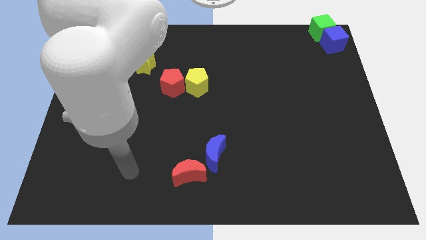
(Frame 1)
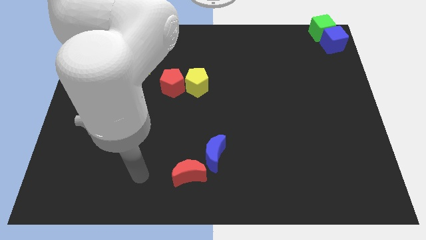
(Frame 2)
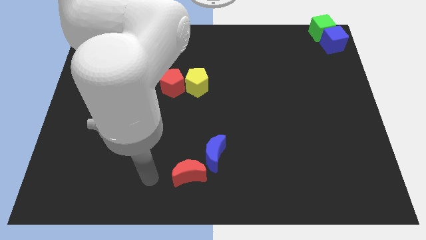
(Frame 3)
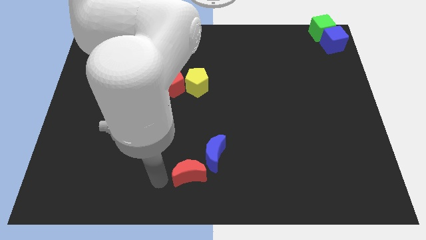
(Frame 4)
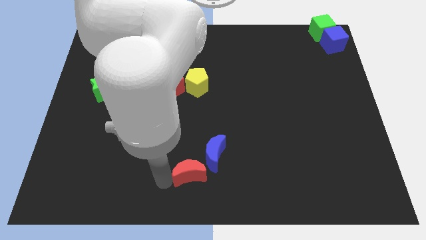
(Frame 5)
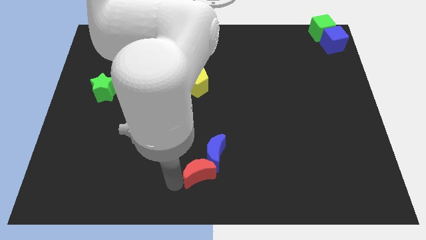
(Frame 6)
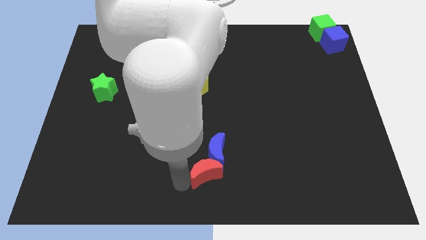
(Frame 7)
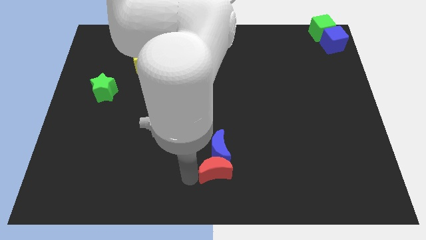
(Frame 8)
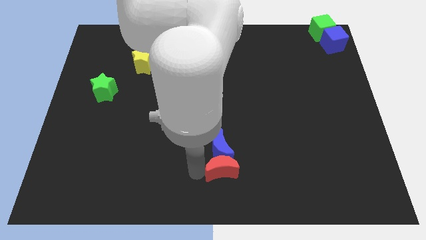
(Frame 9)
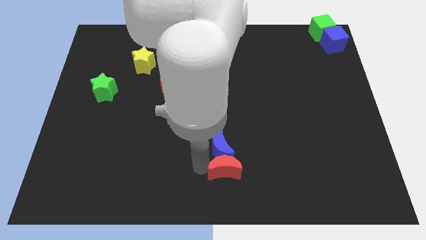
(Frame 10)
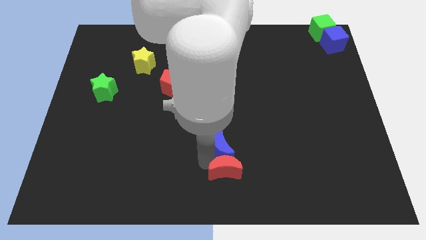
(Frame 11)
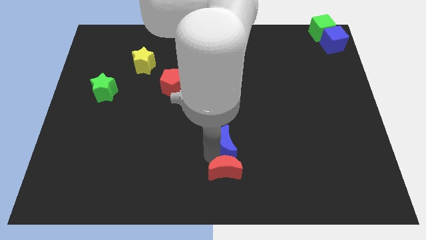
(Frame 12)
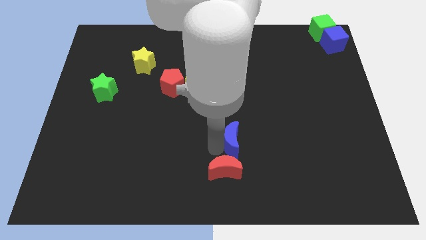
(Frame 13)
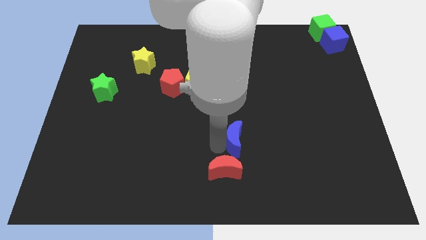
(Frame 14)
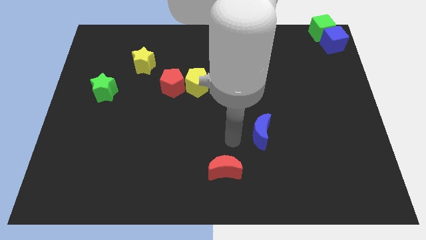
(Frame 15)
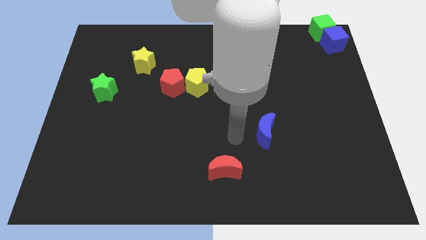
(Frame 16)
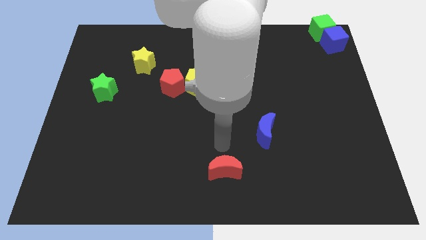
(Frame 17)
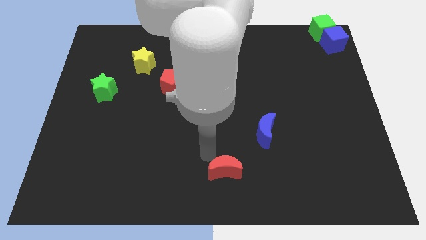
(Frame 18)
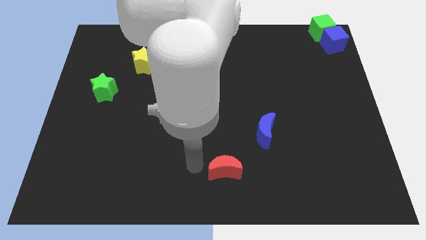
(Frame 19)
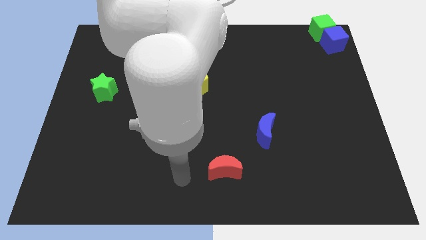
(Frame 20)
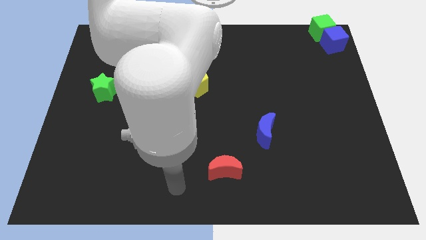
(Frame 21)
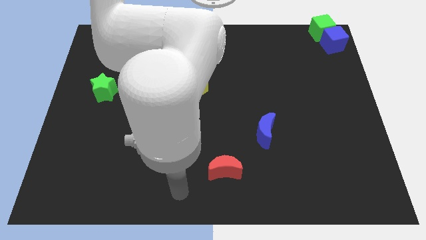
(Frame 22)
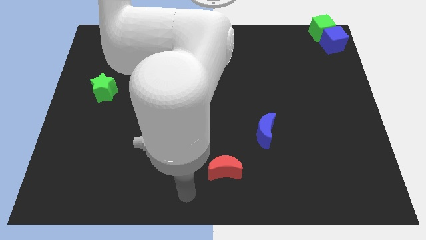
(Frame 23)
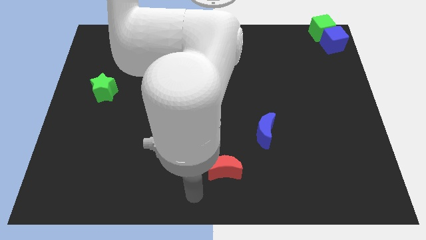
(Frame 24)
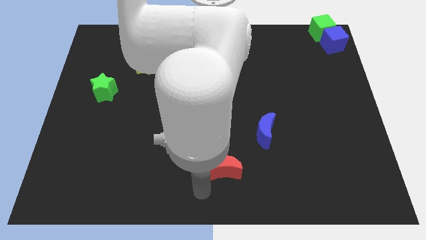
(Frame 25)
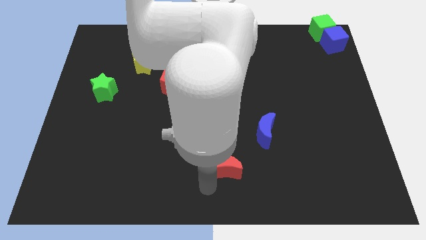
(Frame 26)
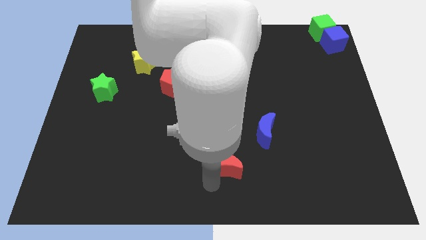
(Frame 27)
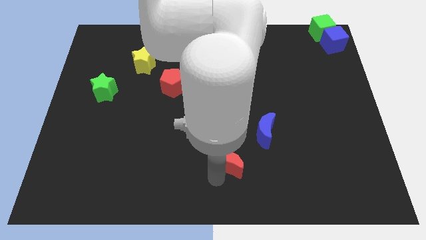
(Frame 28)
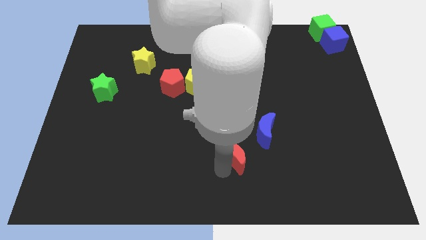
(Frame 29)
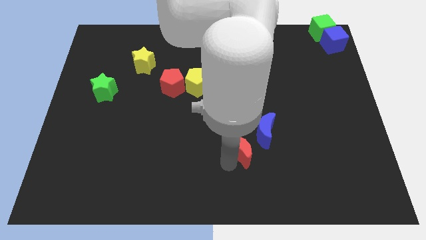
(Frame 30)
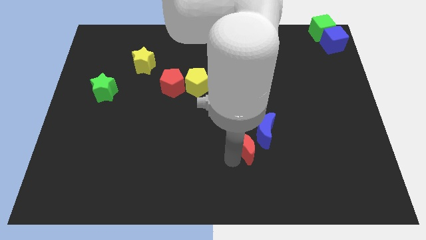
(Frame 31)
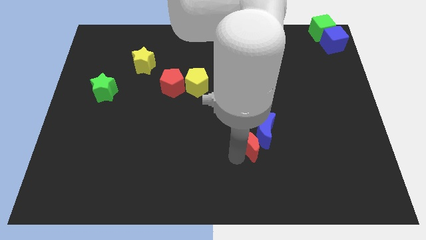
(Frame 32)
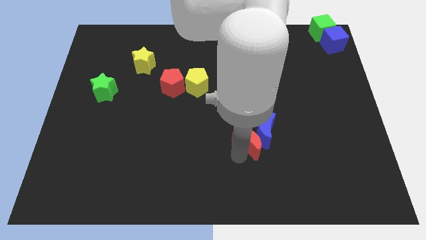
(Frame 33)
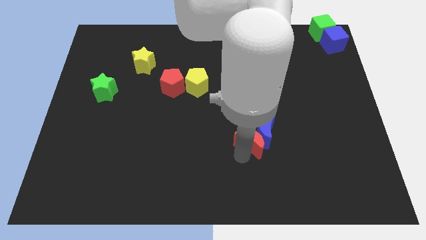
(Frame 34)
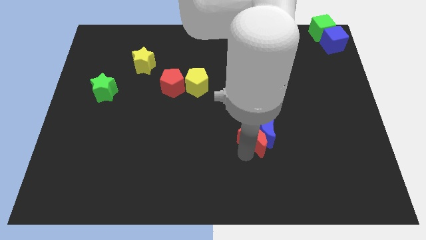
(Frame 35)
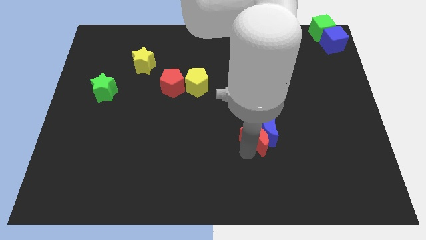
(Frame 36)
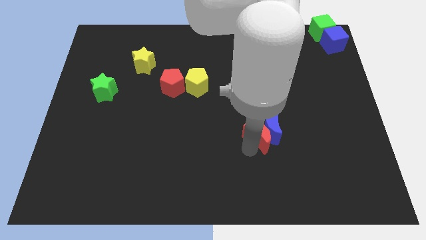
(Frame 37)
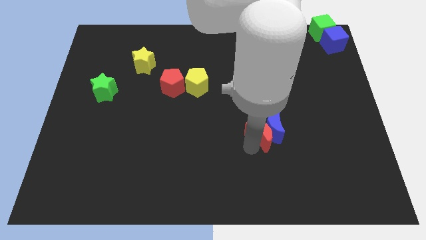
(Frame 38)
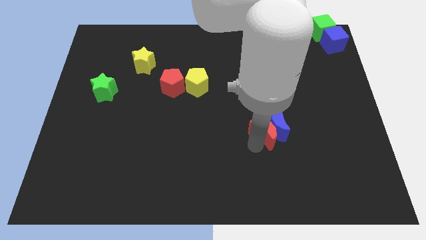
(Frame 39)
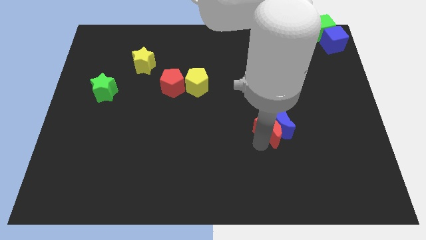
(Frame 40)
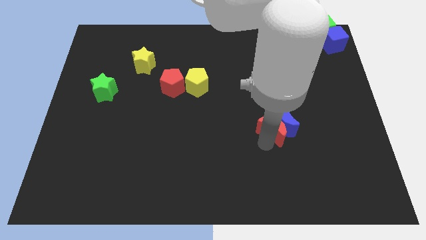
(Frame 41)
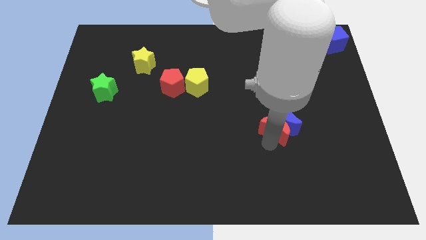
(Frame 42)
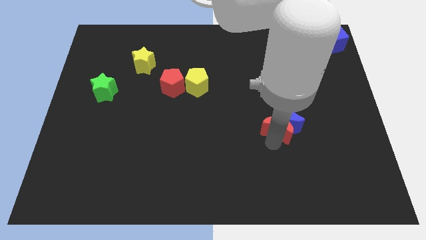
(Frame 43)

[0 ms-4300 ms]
push red moon in to blue moon

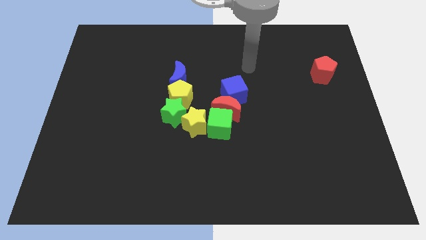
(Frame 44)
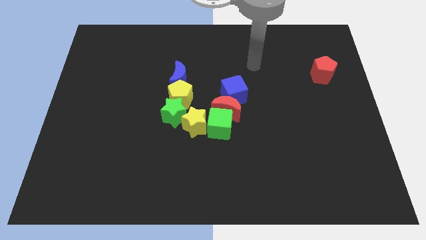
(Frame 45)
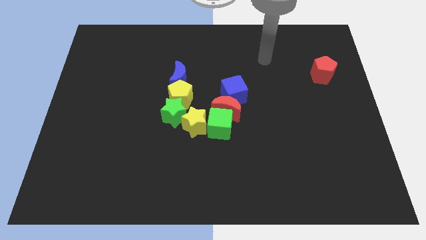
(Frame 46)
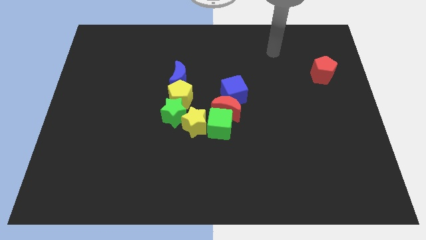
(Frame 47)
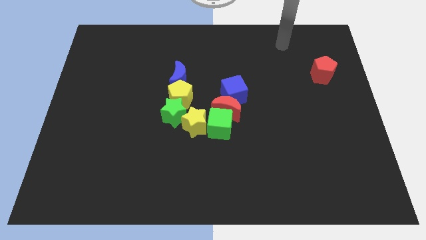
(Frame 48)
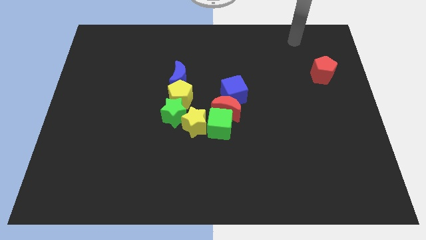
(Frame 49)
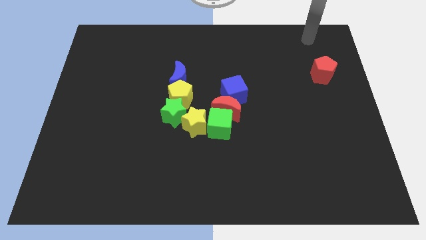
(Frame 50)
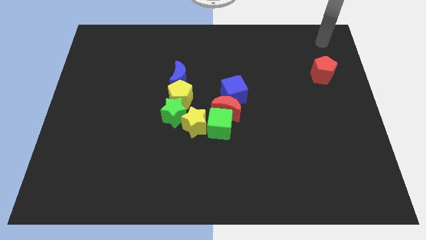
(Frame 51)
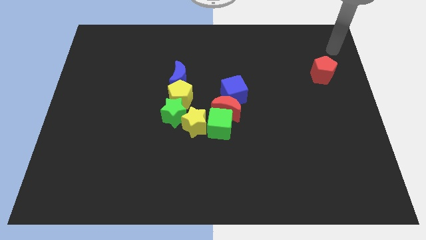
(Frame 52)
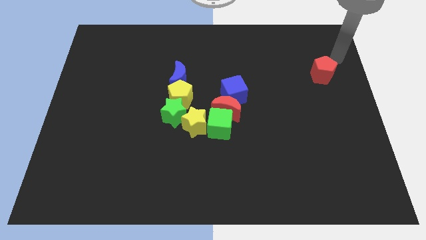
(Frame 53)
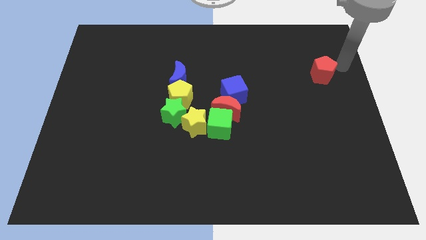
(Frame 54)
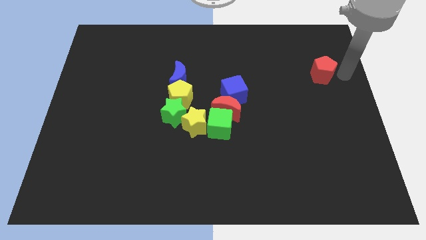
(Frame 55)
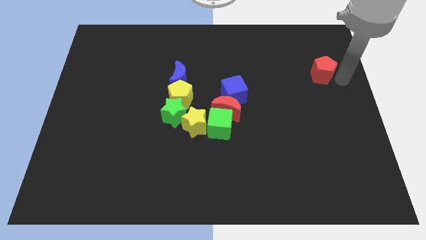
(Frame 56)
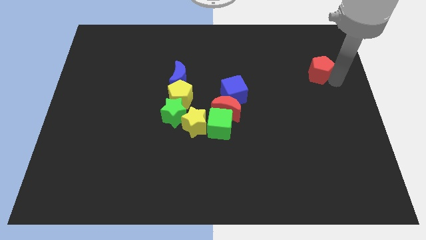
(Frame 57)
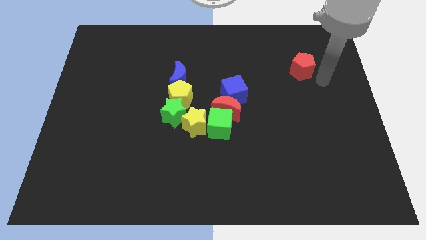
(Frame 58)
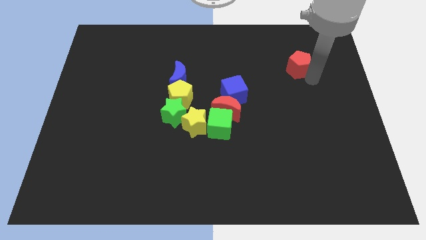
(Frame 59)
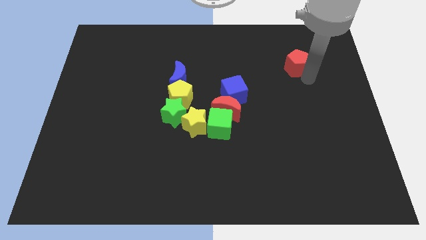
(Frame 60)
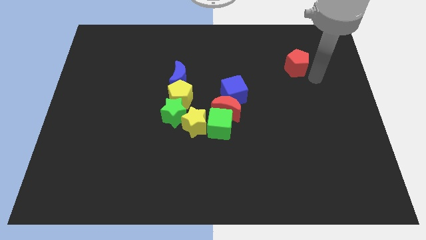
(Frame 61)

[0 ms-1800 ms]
touch the right of the red pentagon

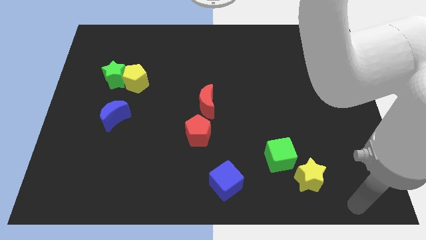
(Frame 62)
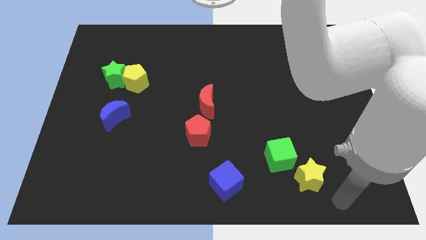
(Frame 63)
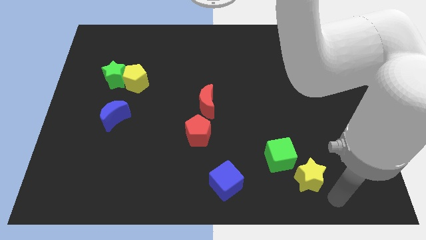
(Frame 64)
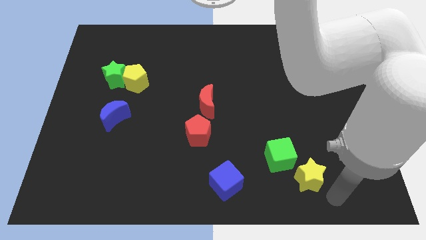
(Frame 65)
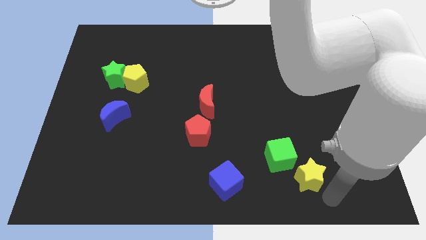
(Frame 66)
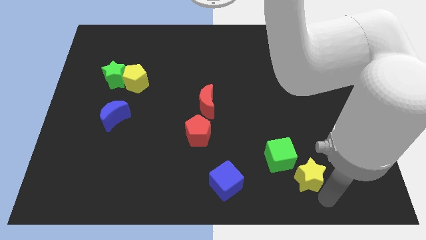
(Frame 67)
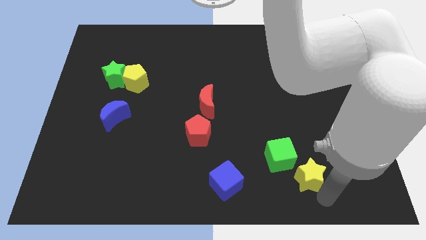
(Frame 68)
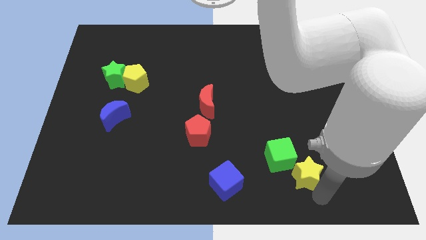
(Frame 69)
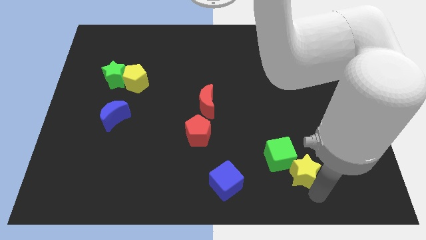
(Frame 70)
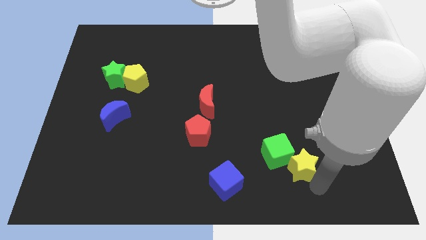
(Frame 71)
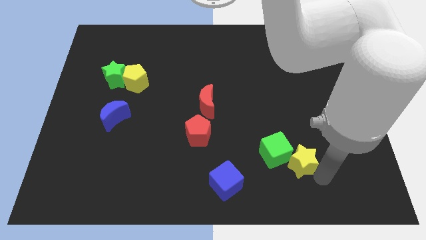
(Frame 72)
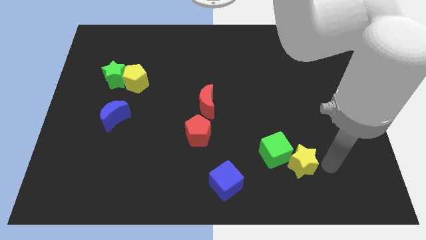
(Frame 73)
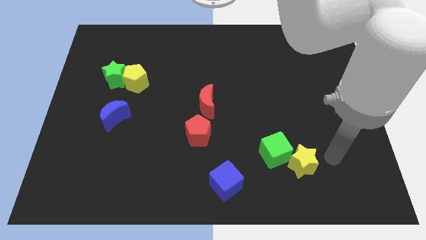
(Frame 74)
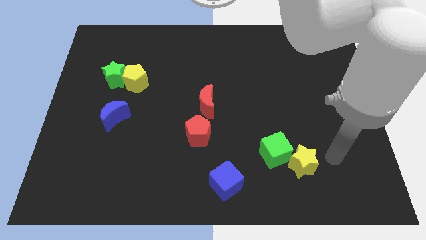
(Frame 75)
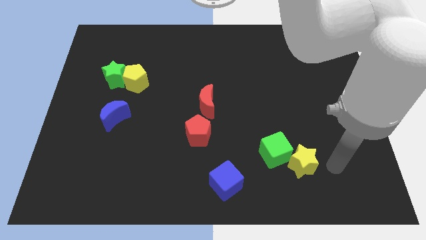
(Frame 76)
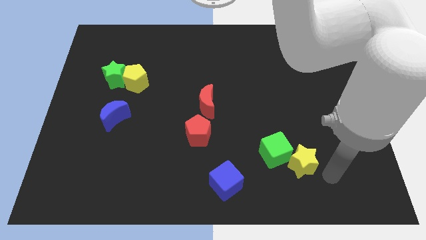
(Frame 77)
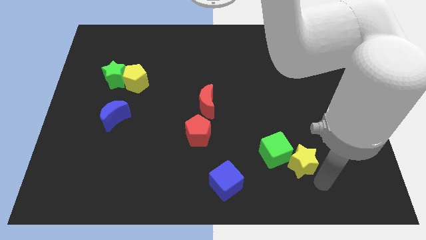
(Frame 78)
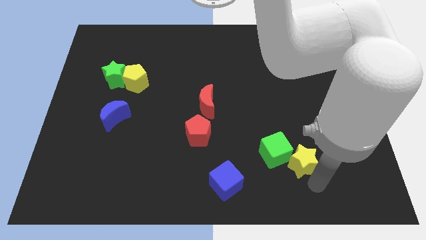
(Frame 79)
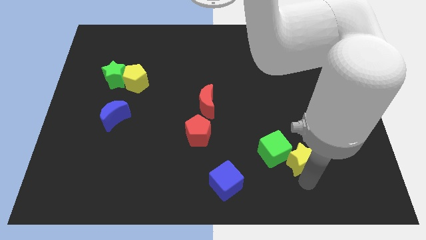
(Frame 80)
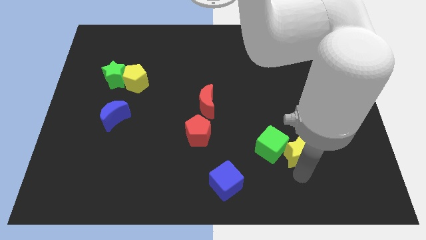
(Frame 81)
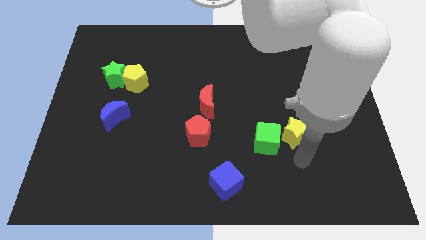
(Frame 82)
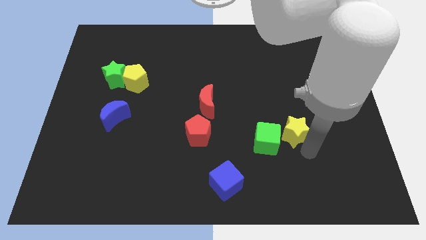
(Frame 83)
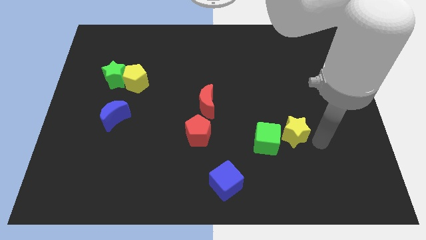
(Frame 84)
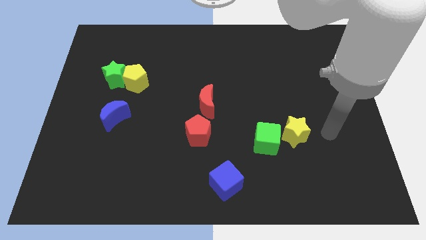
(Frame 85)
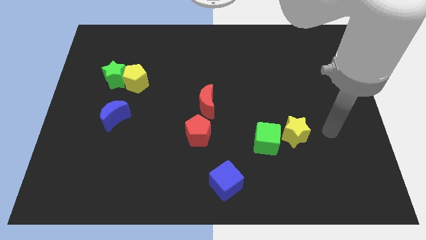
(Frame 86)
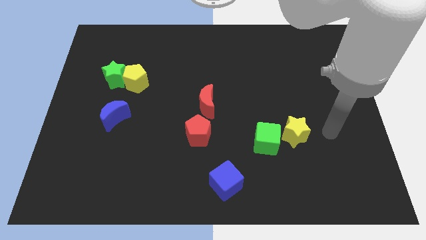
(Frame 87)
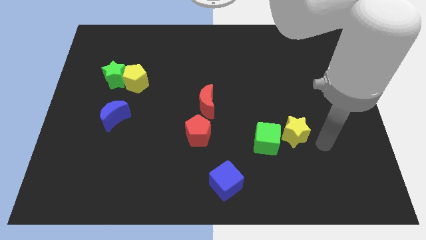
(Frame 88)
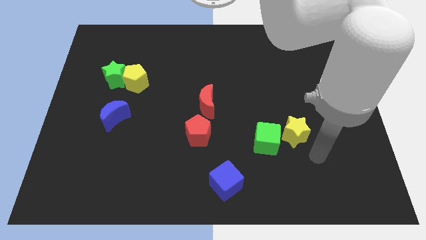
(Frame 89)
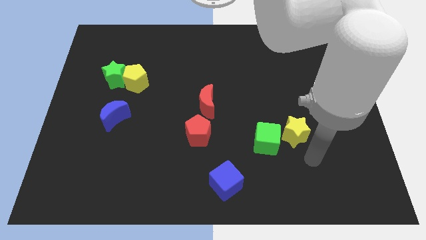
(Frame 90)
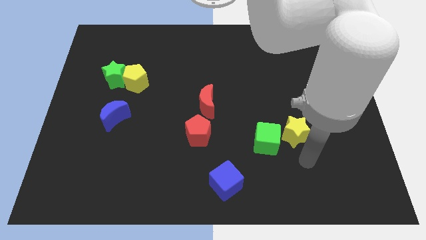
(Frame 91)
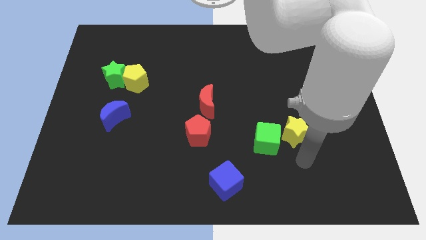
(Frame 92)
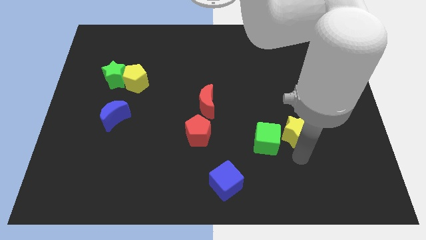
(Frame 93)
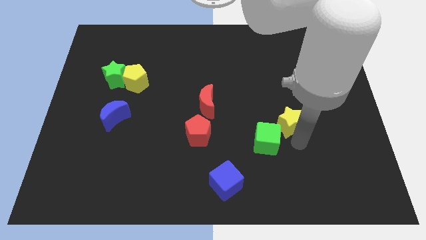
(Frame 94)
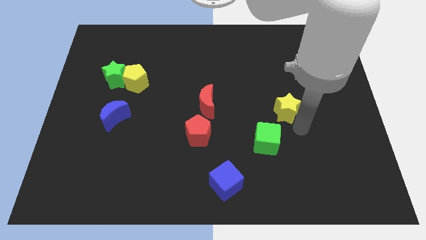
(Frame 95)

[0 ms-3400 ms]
place the green cube and yellow star diagonal on the top right side of the blue cube
